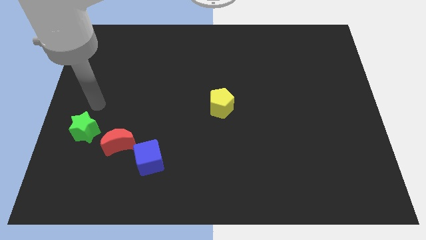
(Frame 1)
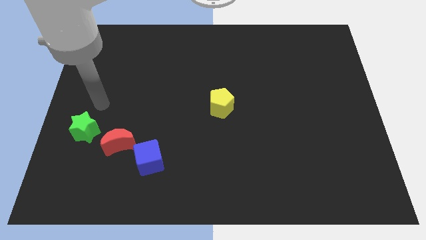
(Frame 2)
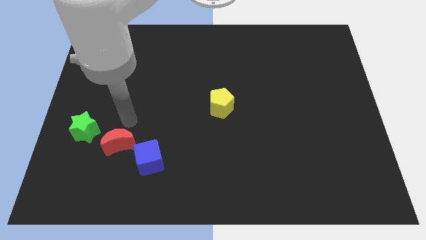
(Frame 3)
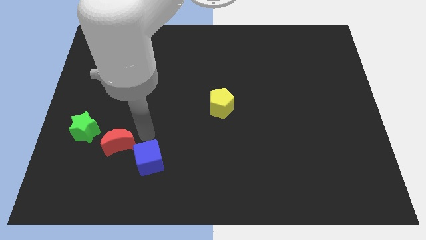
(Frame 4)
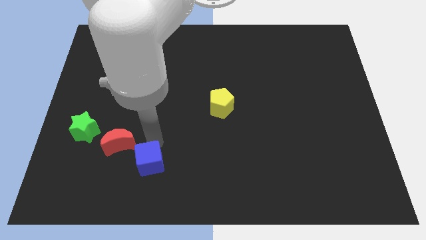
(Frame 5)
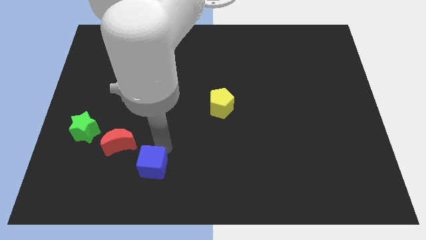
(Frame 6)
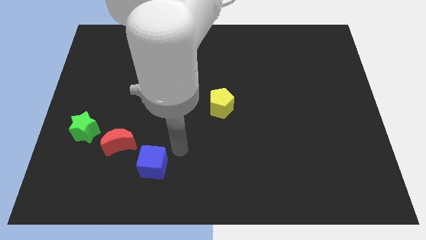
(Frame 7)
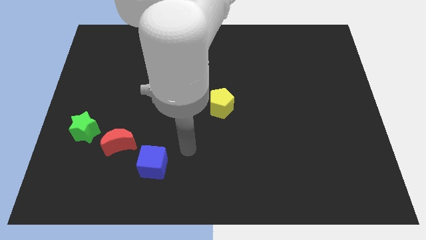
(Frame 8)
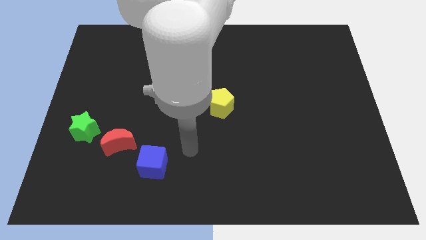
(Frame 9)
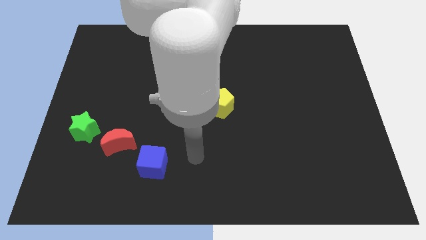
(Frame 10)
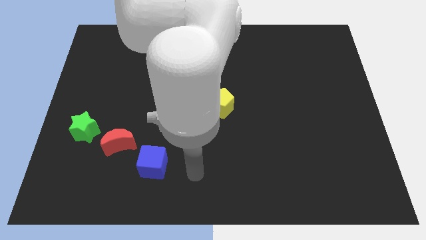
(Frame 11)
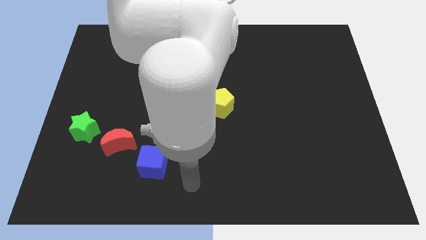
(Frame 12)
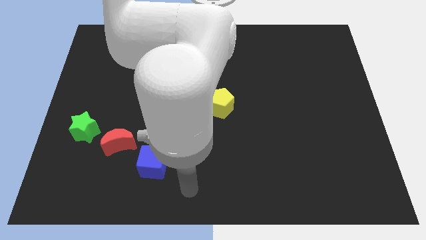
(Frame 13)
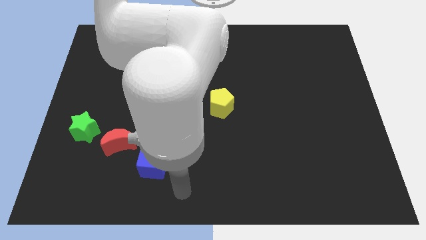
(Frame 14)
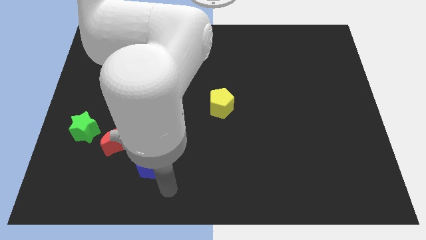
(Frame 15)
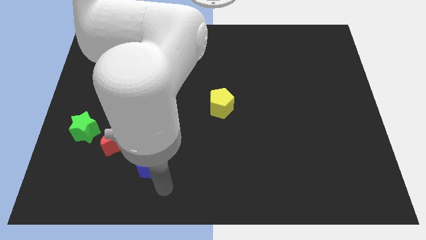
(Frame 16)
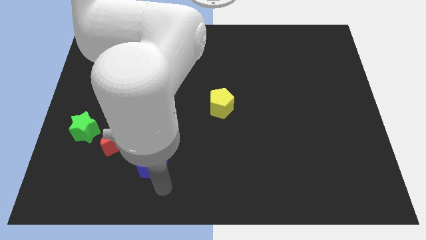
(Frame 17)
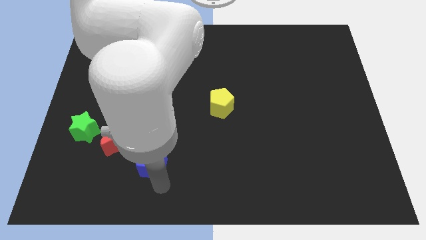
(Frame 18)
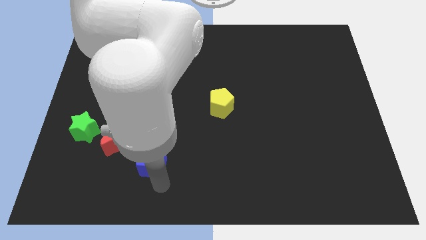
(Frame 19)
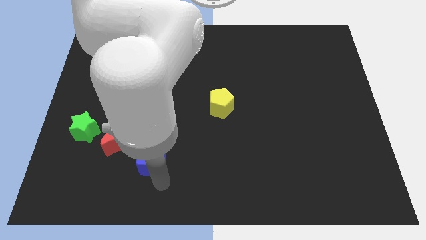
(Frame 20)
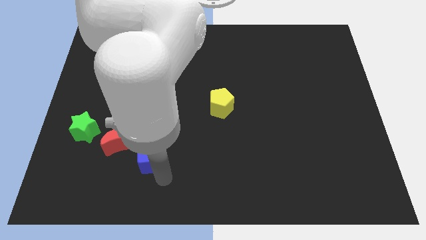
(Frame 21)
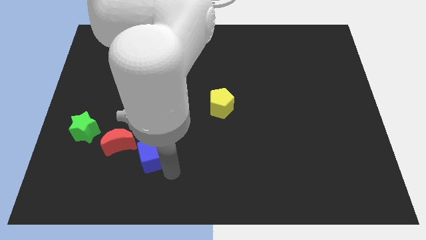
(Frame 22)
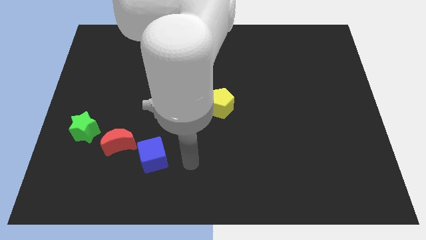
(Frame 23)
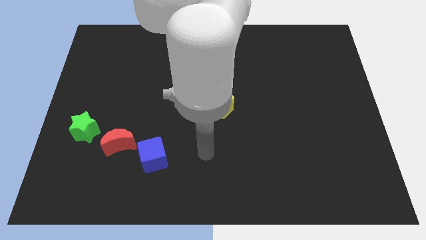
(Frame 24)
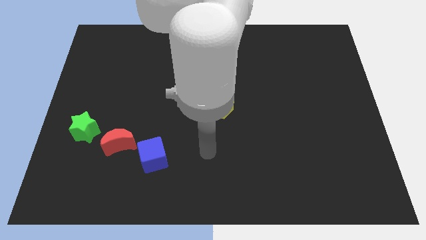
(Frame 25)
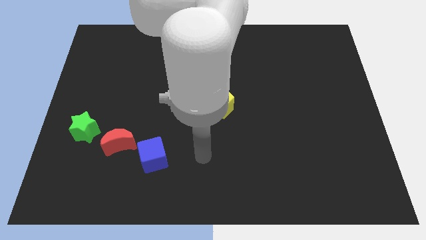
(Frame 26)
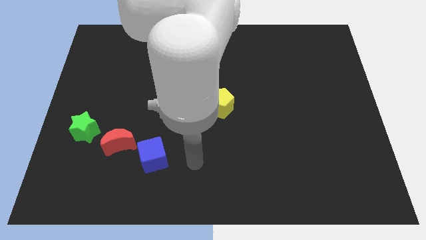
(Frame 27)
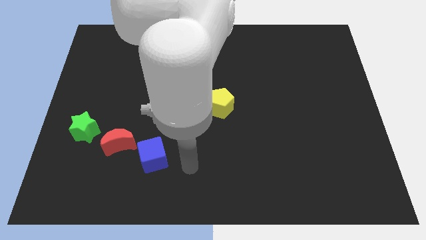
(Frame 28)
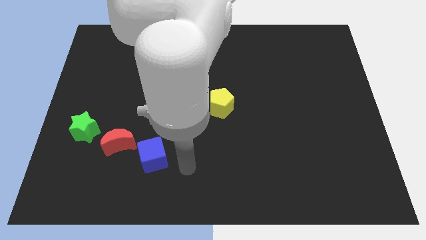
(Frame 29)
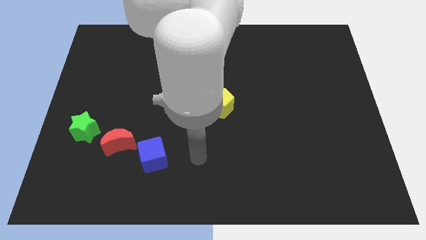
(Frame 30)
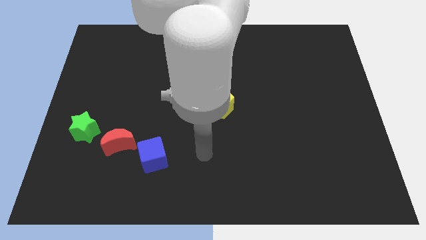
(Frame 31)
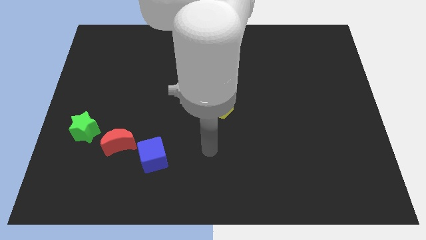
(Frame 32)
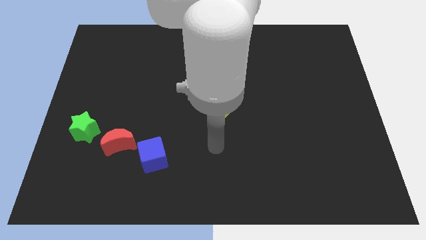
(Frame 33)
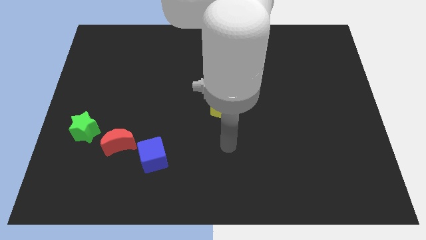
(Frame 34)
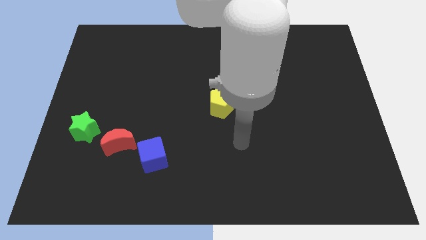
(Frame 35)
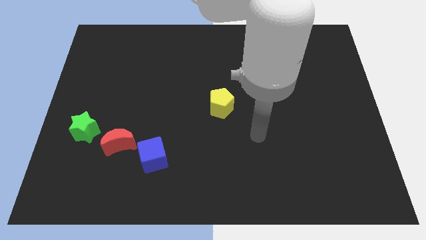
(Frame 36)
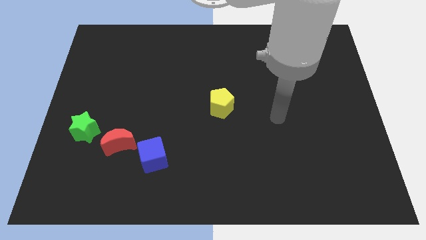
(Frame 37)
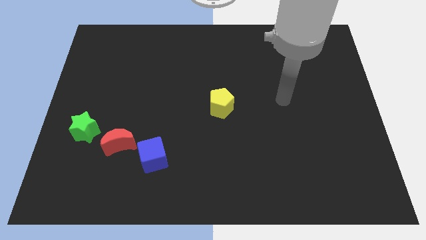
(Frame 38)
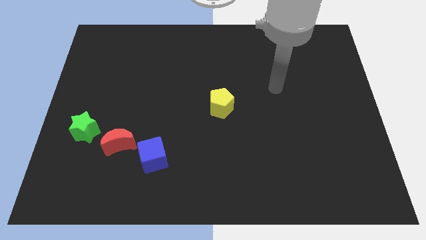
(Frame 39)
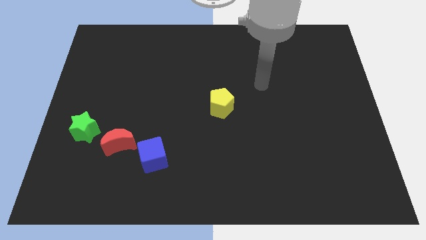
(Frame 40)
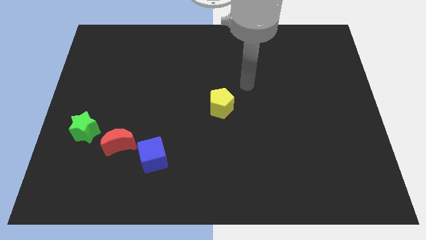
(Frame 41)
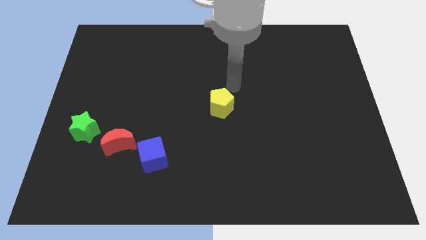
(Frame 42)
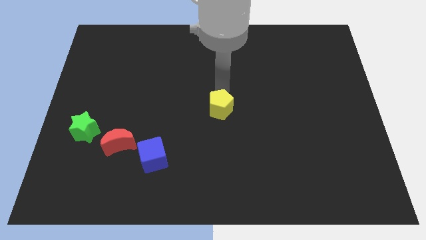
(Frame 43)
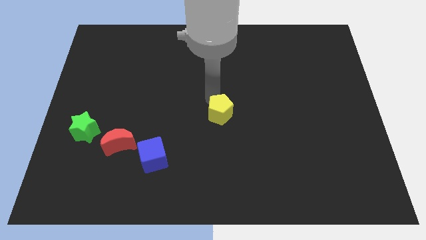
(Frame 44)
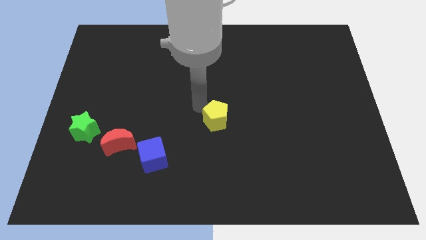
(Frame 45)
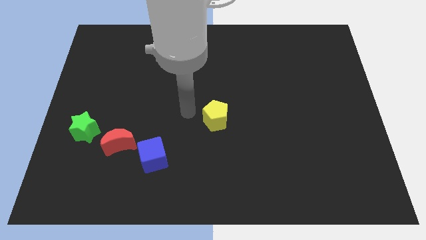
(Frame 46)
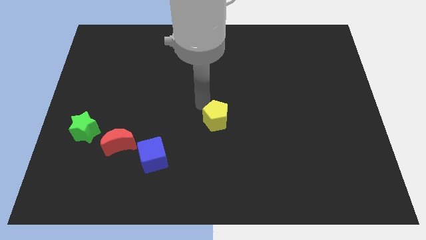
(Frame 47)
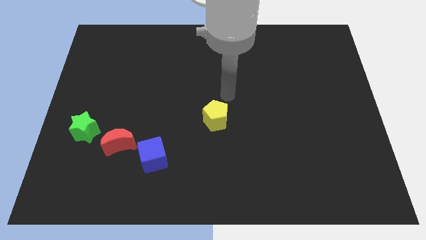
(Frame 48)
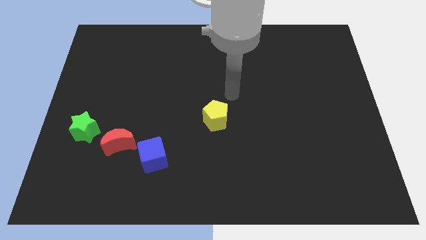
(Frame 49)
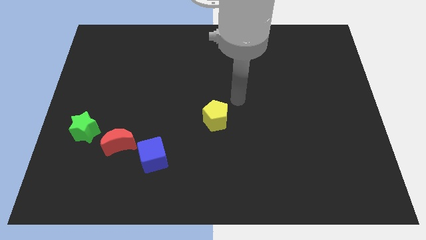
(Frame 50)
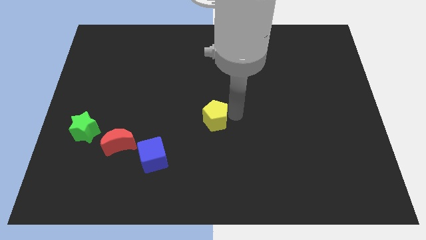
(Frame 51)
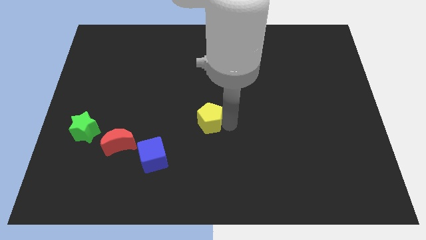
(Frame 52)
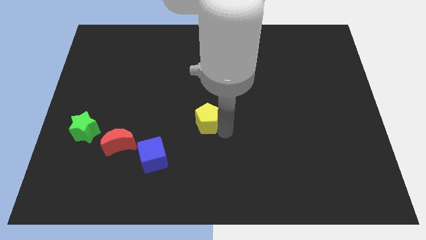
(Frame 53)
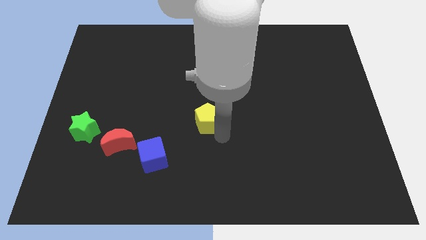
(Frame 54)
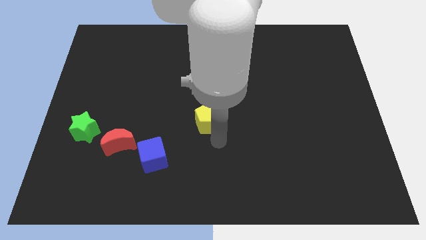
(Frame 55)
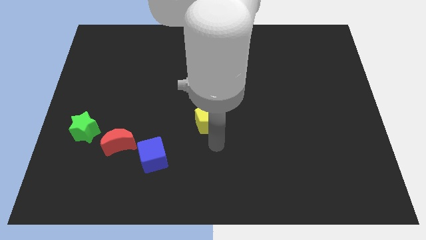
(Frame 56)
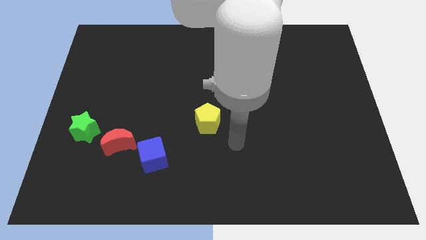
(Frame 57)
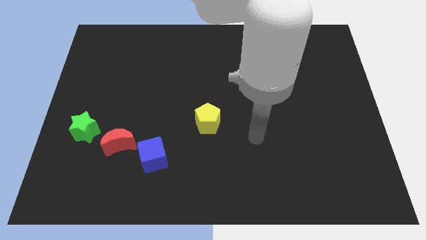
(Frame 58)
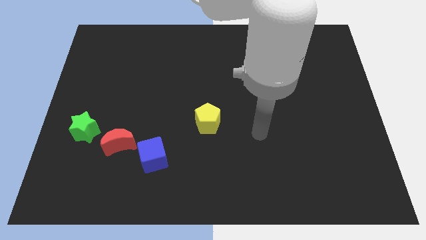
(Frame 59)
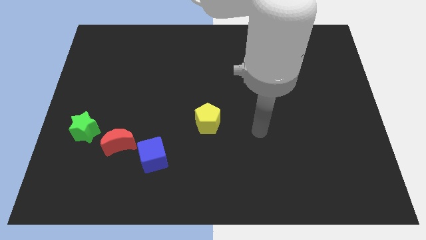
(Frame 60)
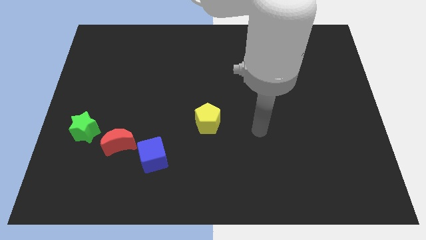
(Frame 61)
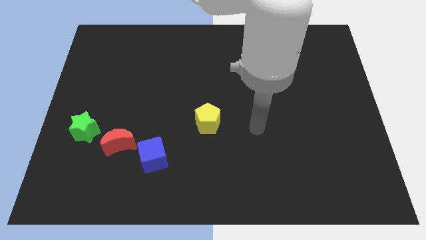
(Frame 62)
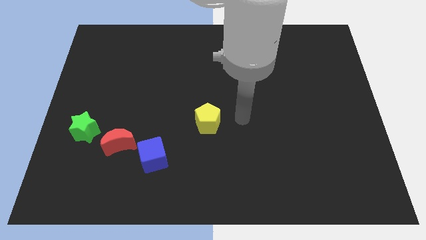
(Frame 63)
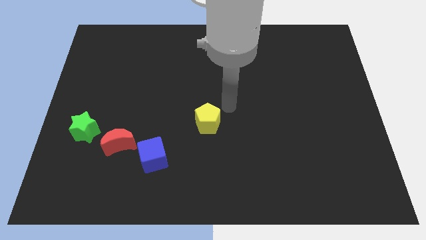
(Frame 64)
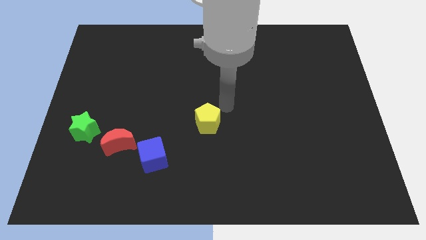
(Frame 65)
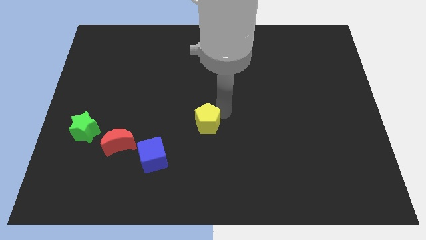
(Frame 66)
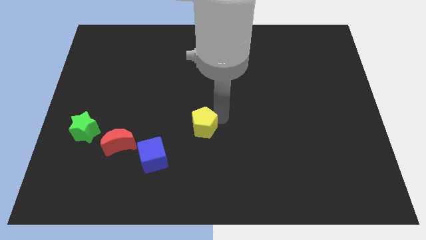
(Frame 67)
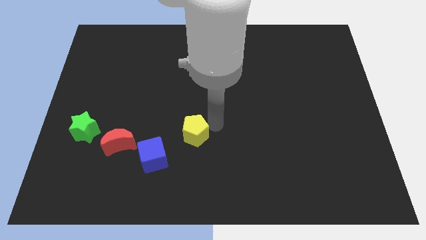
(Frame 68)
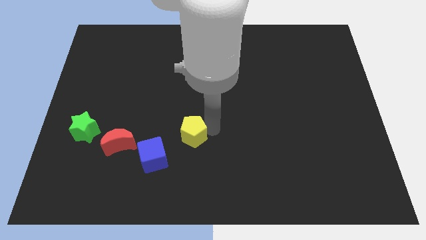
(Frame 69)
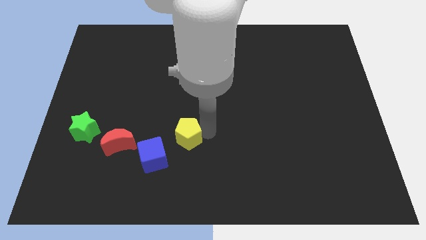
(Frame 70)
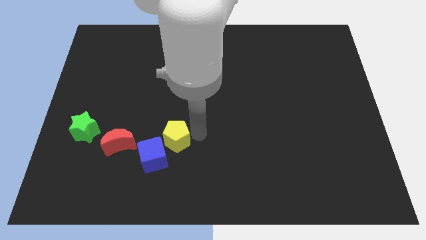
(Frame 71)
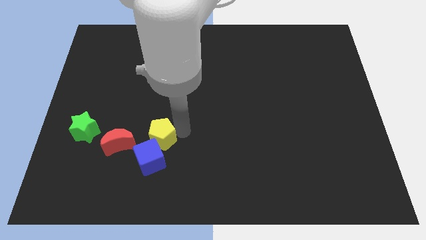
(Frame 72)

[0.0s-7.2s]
push the pentagon towards the cube

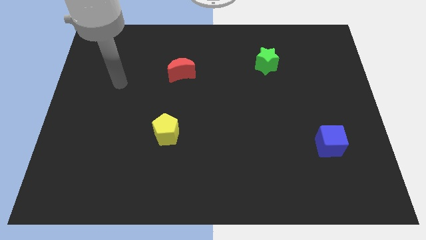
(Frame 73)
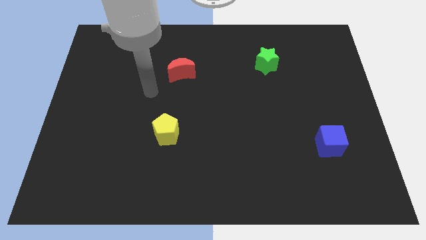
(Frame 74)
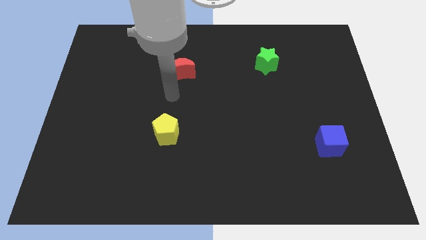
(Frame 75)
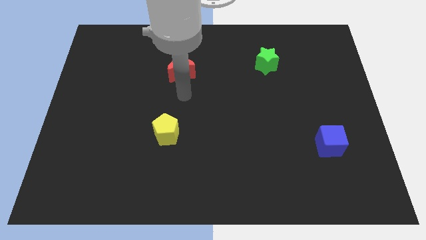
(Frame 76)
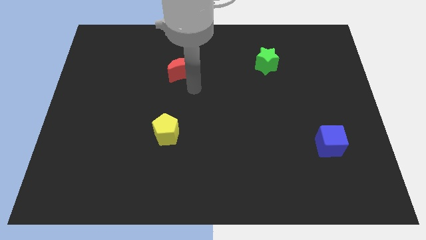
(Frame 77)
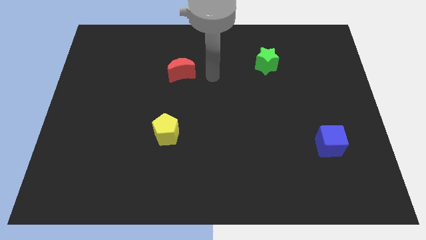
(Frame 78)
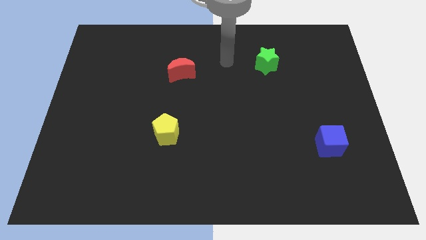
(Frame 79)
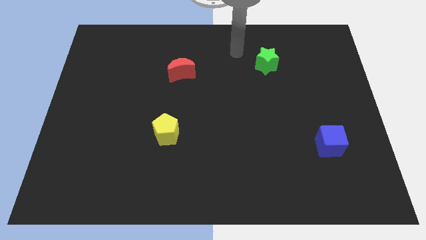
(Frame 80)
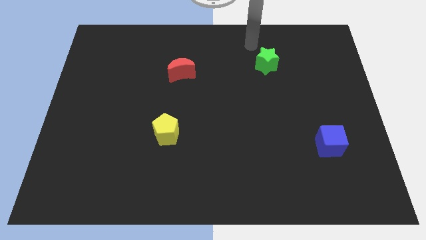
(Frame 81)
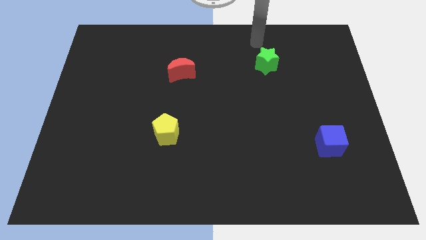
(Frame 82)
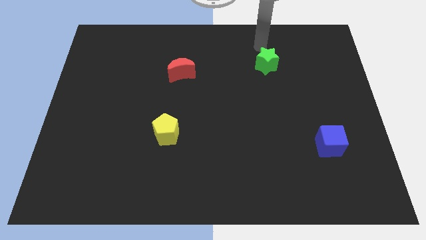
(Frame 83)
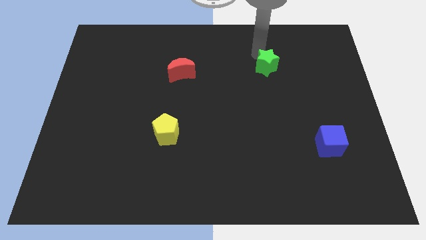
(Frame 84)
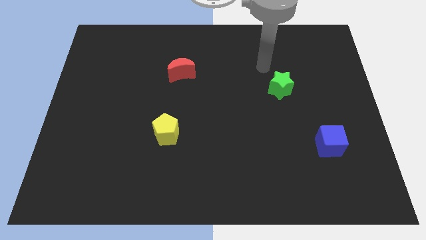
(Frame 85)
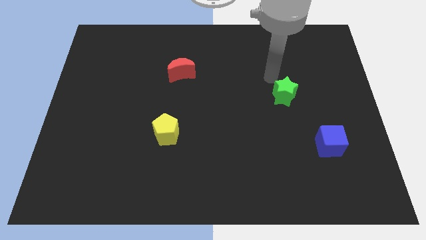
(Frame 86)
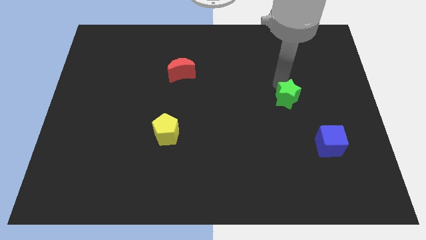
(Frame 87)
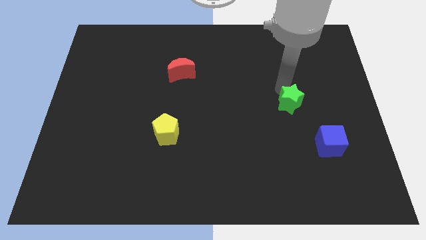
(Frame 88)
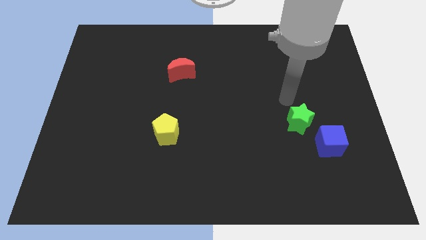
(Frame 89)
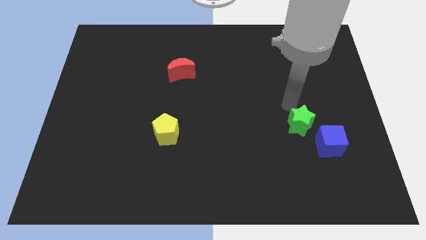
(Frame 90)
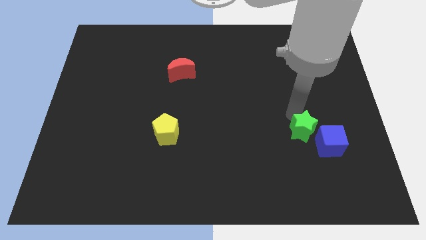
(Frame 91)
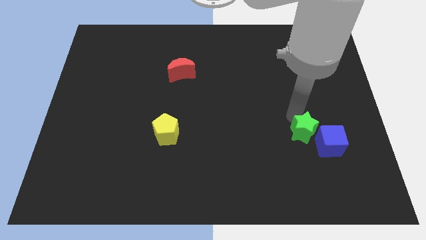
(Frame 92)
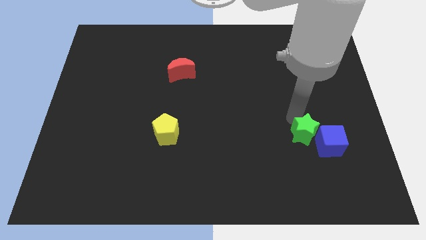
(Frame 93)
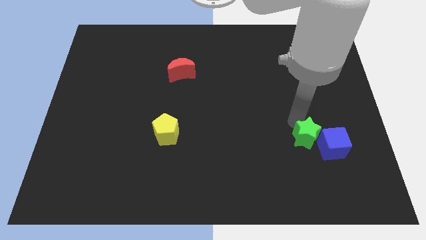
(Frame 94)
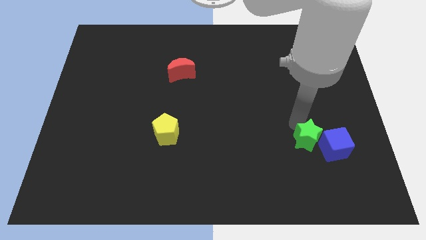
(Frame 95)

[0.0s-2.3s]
push the green star to the blue cube
